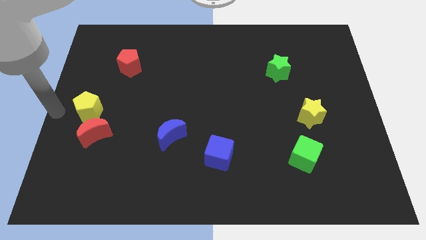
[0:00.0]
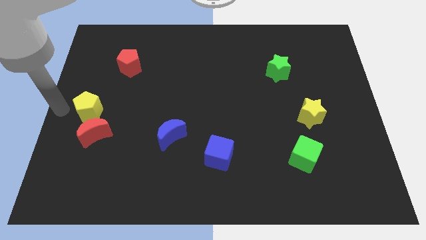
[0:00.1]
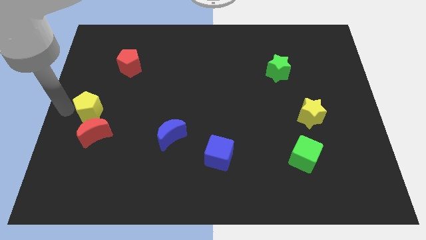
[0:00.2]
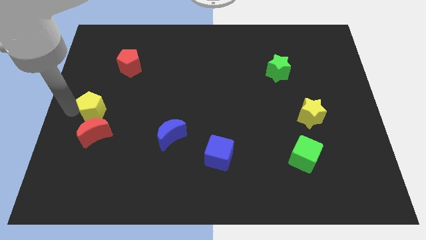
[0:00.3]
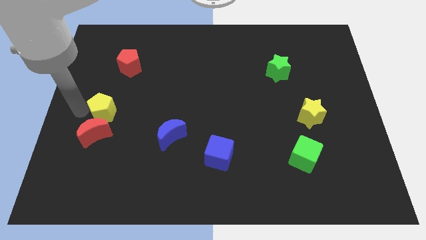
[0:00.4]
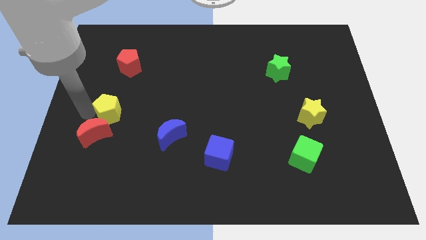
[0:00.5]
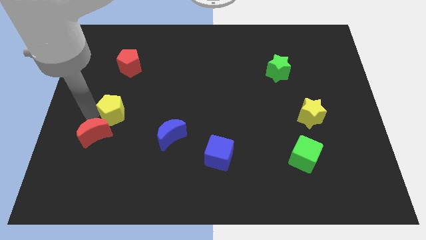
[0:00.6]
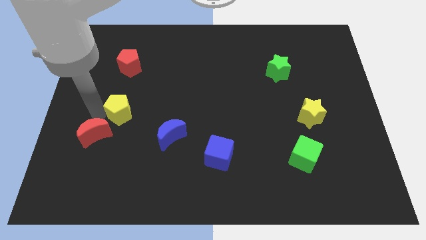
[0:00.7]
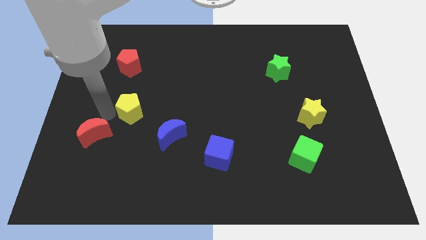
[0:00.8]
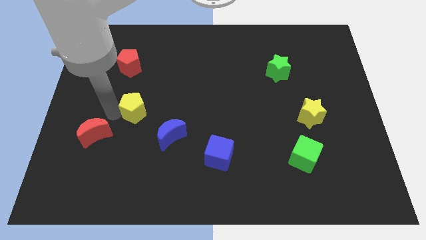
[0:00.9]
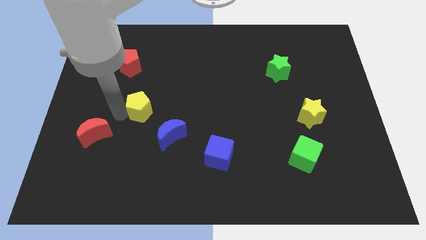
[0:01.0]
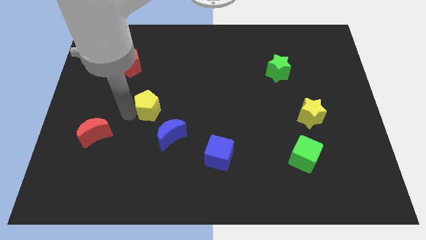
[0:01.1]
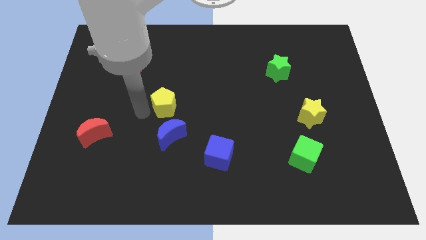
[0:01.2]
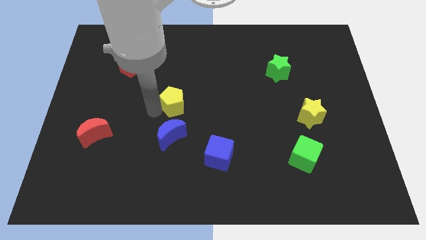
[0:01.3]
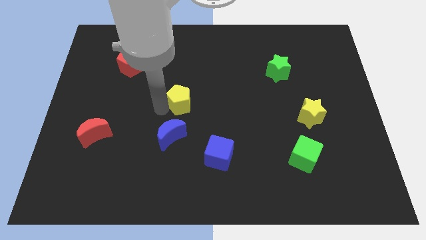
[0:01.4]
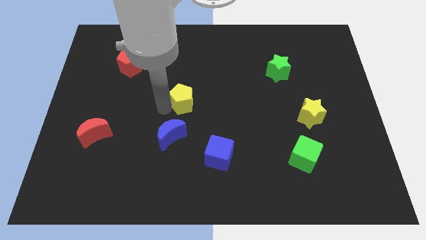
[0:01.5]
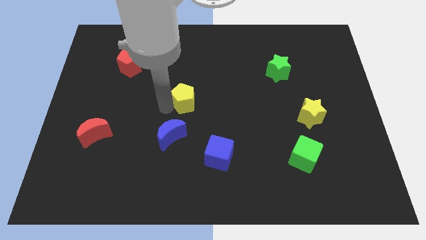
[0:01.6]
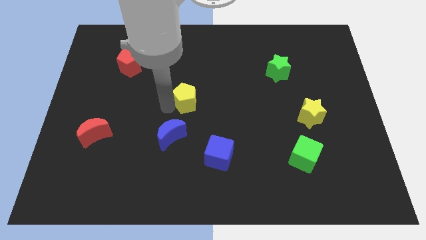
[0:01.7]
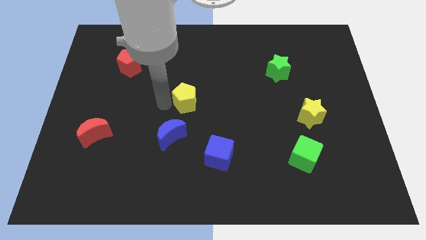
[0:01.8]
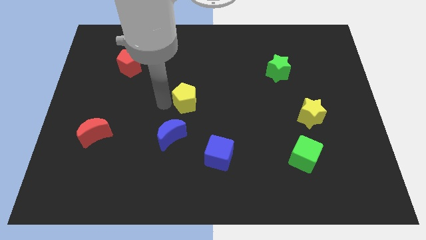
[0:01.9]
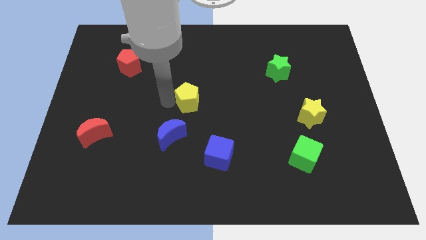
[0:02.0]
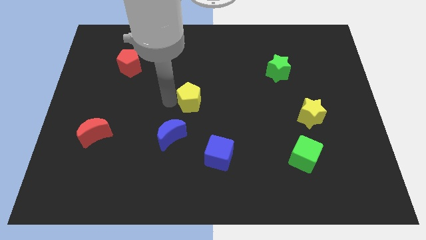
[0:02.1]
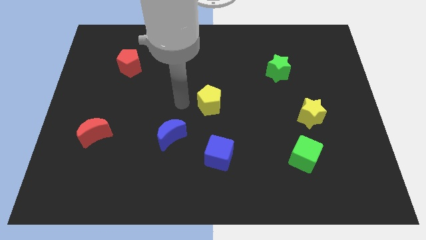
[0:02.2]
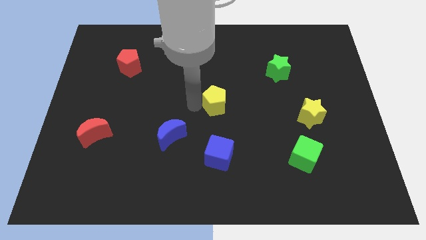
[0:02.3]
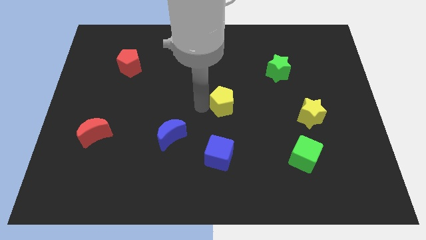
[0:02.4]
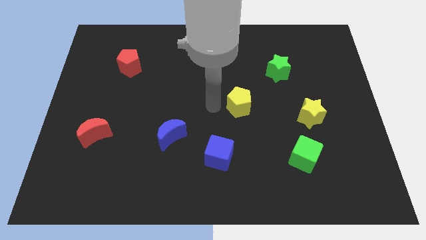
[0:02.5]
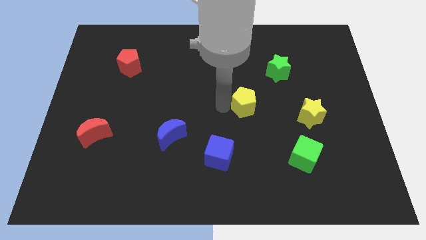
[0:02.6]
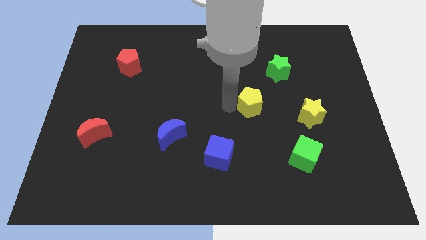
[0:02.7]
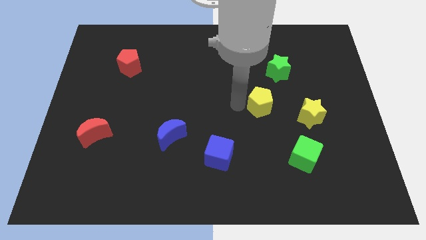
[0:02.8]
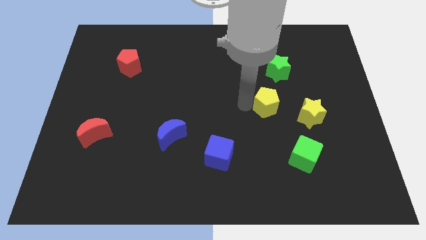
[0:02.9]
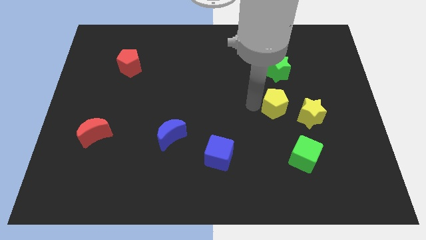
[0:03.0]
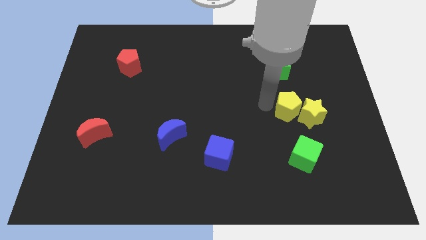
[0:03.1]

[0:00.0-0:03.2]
slide the yellow pentagon diagonally top right to the blue cube

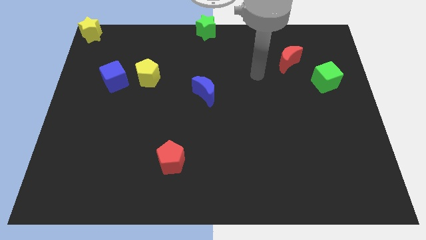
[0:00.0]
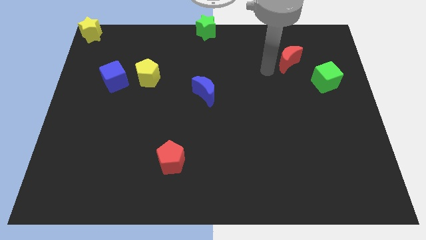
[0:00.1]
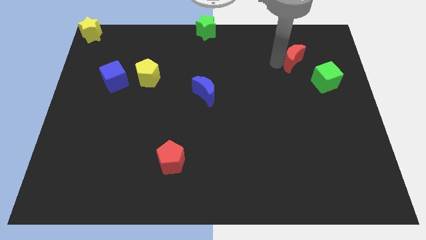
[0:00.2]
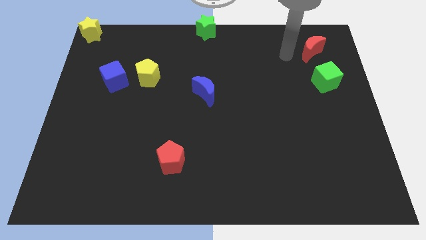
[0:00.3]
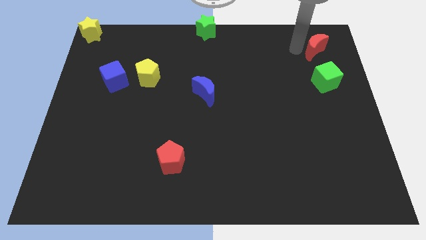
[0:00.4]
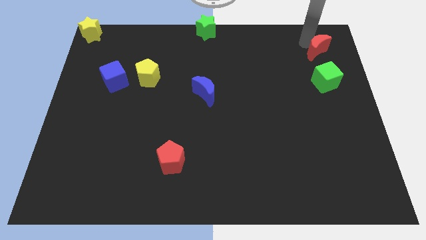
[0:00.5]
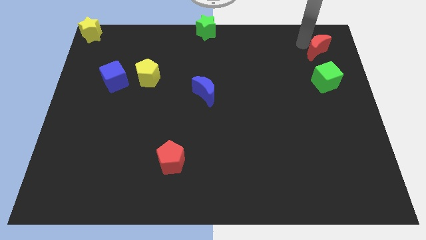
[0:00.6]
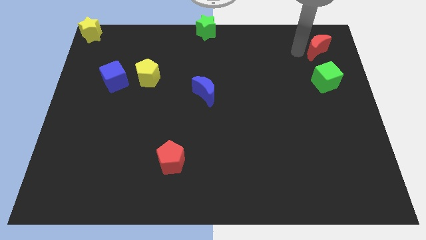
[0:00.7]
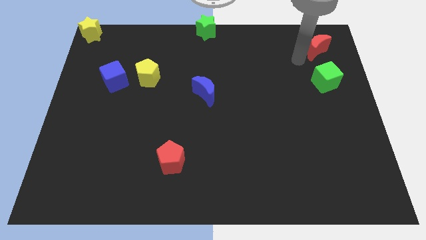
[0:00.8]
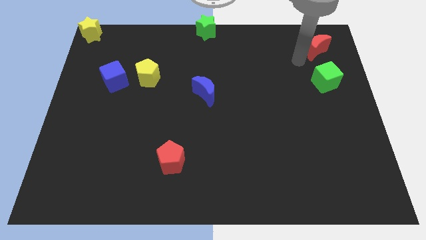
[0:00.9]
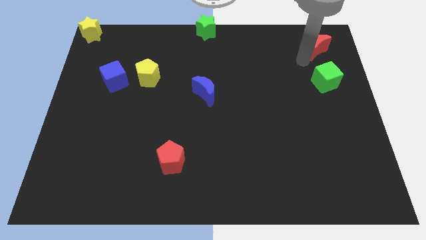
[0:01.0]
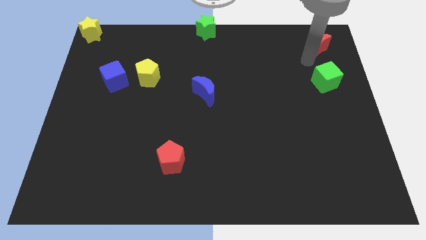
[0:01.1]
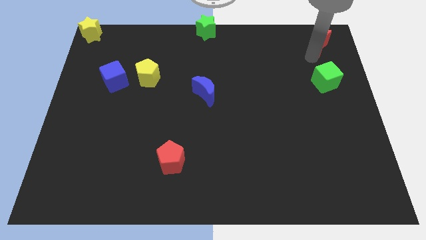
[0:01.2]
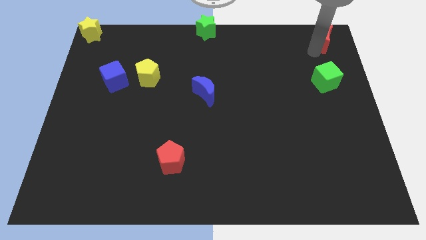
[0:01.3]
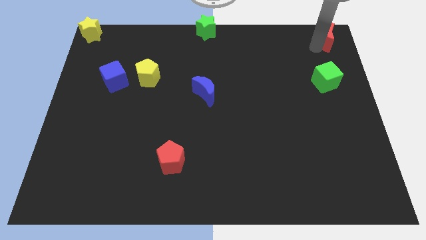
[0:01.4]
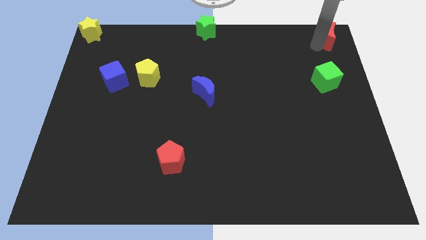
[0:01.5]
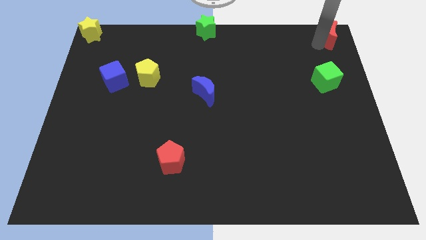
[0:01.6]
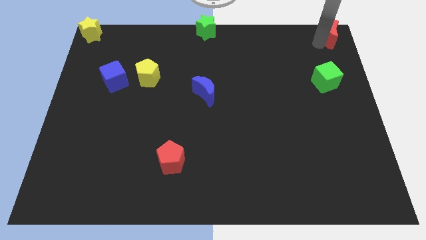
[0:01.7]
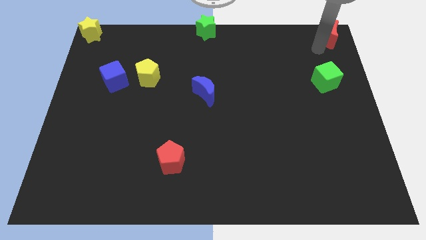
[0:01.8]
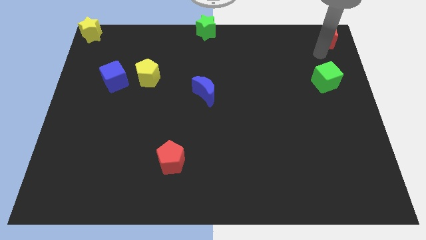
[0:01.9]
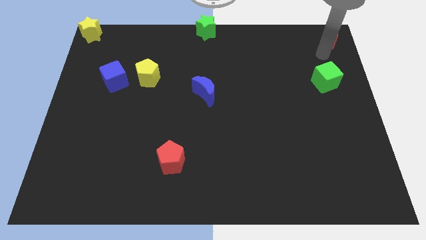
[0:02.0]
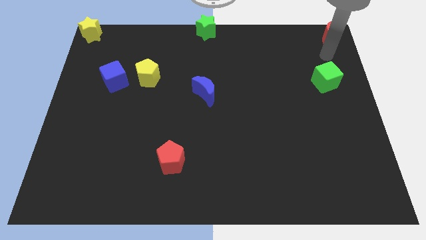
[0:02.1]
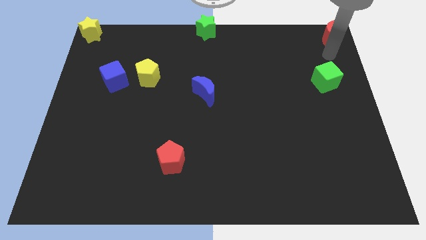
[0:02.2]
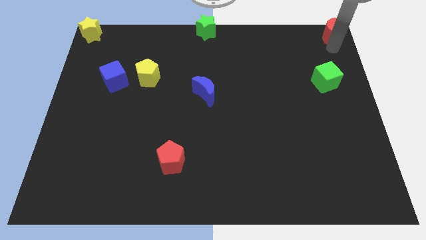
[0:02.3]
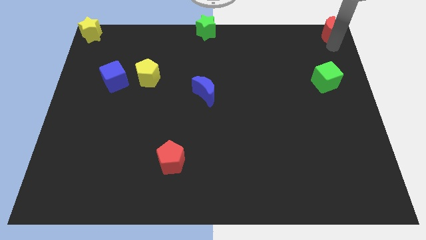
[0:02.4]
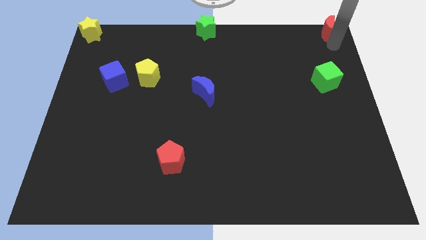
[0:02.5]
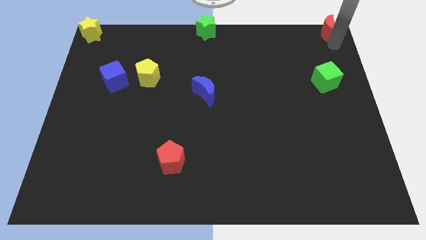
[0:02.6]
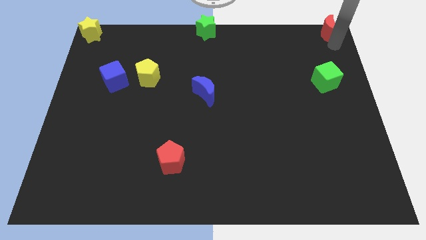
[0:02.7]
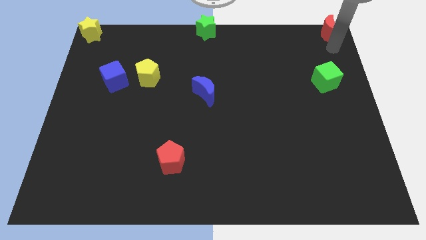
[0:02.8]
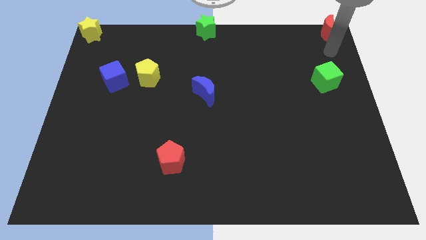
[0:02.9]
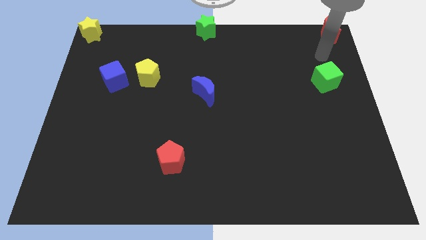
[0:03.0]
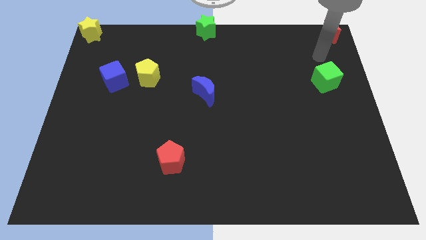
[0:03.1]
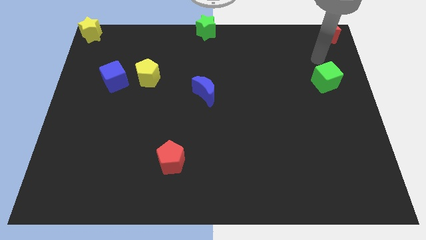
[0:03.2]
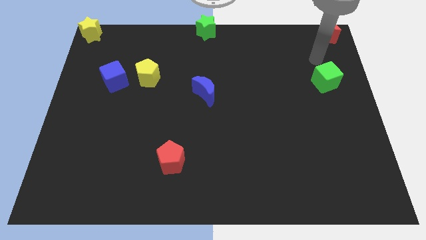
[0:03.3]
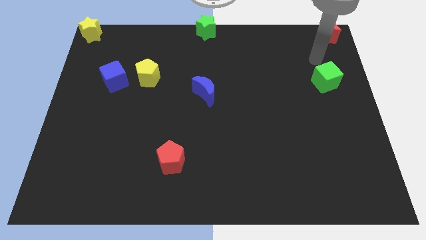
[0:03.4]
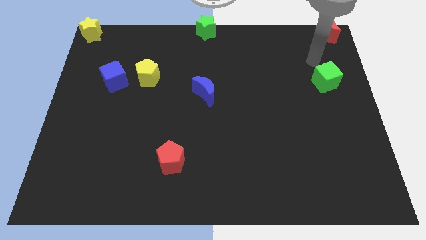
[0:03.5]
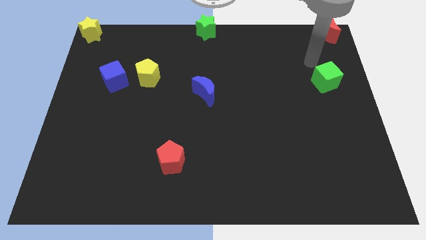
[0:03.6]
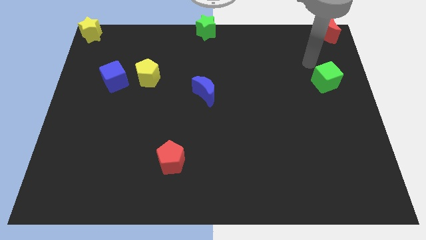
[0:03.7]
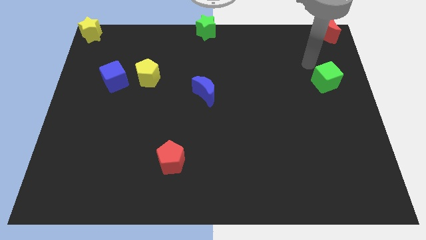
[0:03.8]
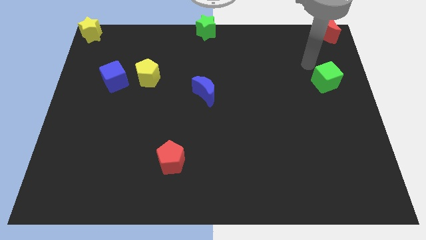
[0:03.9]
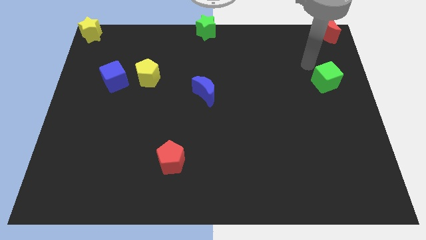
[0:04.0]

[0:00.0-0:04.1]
move red moon to the top right

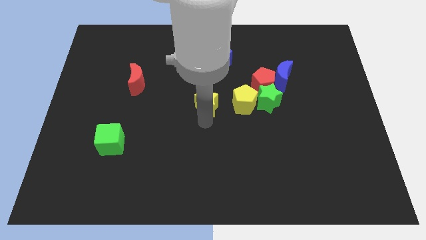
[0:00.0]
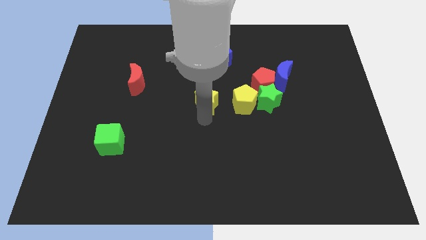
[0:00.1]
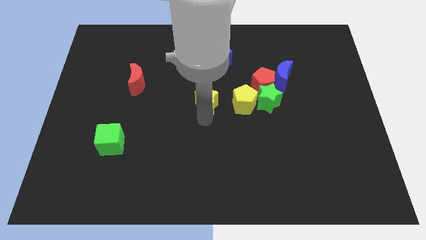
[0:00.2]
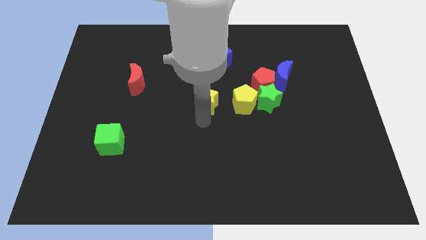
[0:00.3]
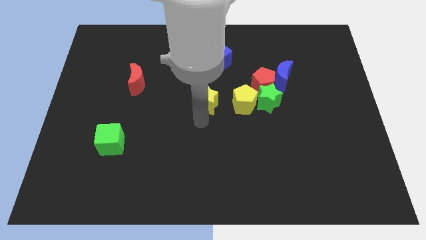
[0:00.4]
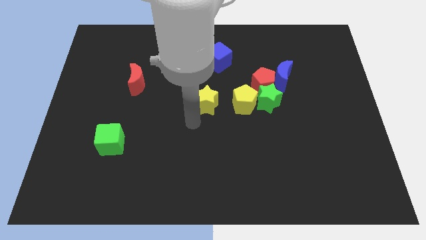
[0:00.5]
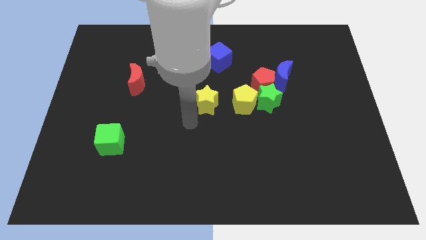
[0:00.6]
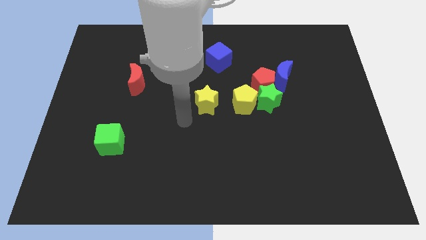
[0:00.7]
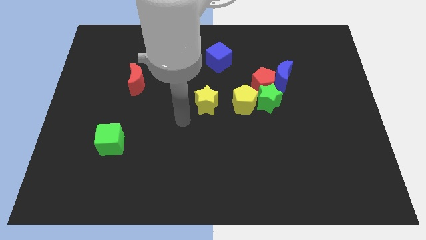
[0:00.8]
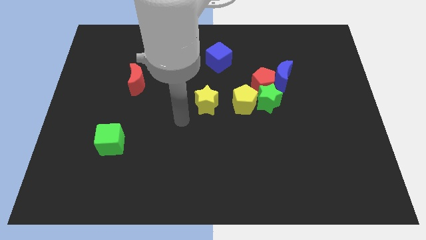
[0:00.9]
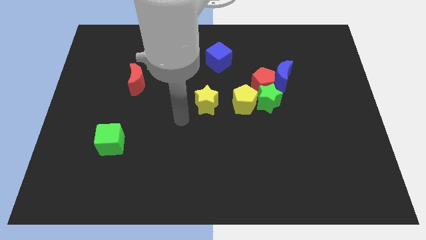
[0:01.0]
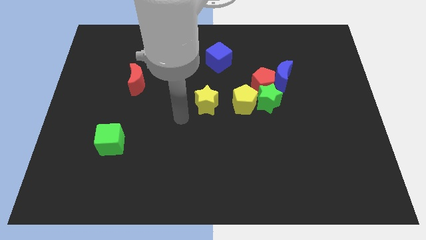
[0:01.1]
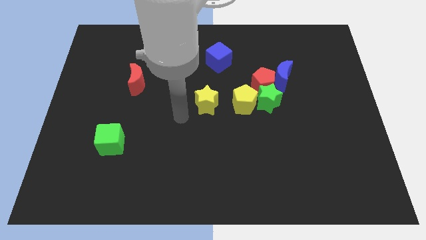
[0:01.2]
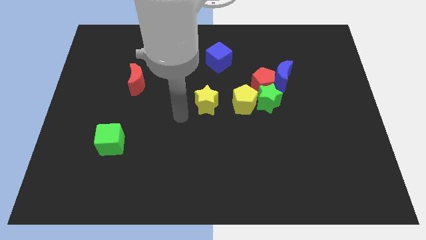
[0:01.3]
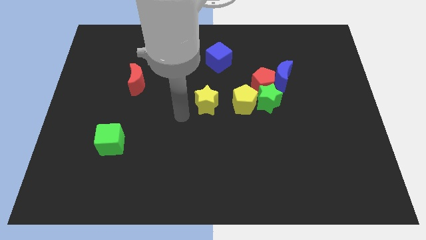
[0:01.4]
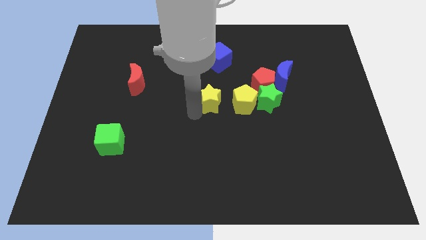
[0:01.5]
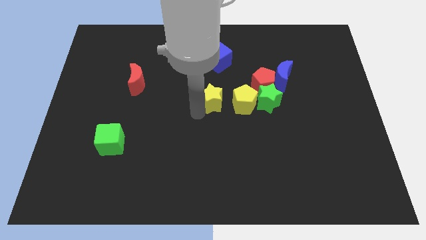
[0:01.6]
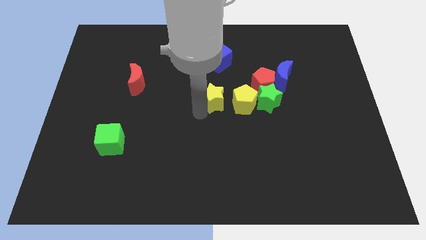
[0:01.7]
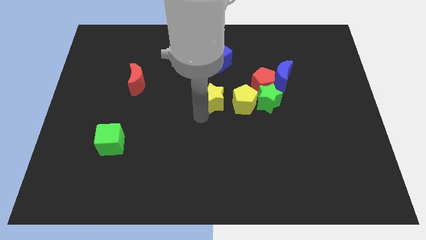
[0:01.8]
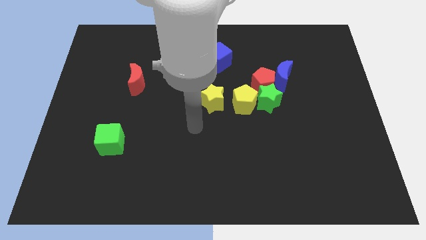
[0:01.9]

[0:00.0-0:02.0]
move the yellow star slightly right
